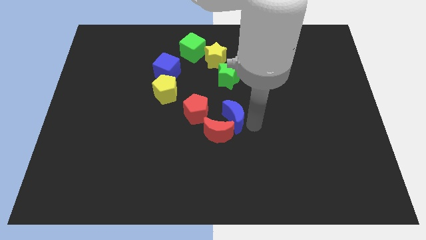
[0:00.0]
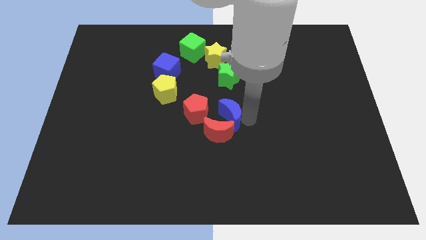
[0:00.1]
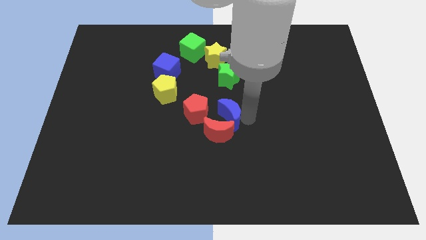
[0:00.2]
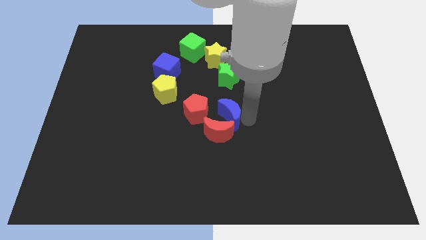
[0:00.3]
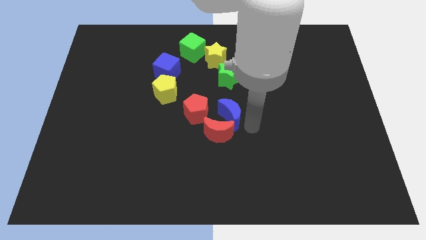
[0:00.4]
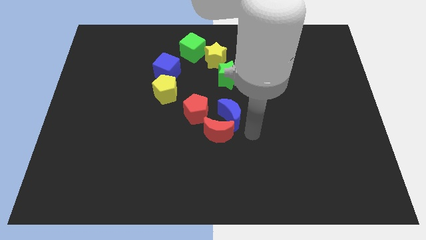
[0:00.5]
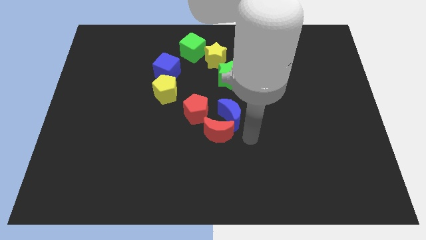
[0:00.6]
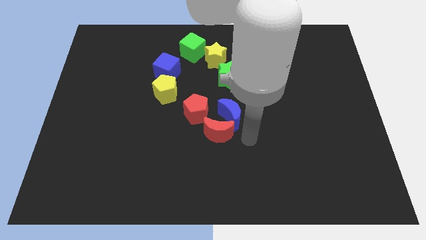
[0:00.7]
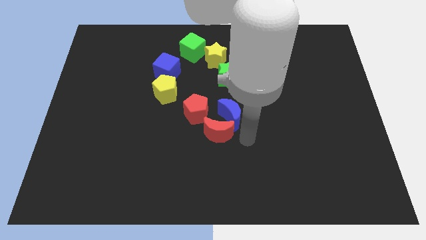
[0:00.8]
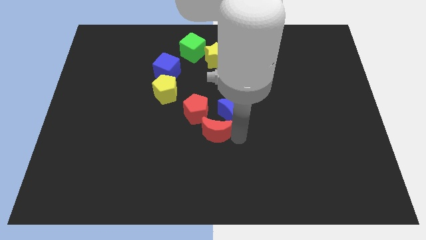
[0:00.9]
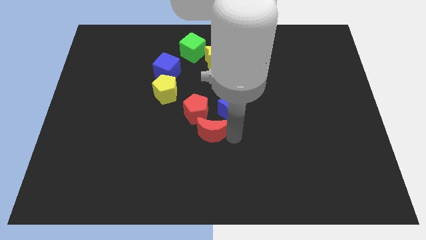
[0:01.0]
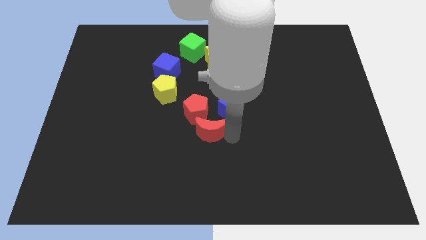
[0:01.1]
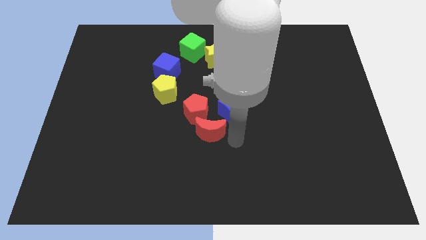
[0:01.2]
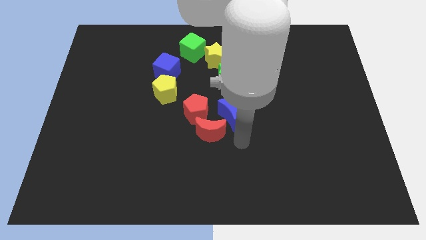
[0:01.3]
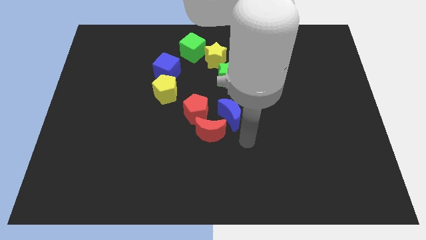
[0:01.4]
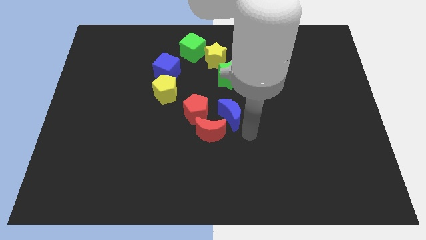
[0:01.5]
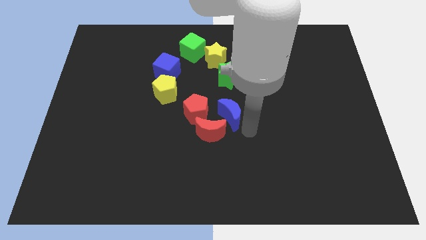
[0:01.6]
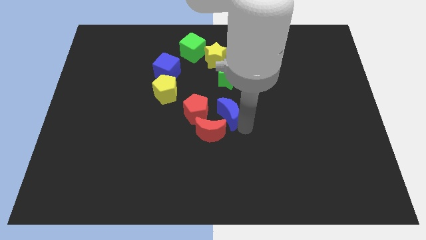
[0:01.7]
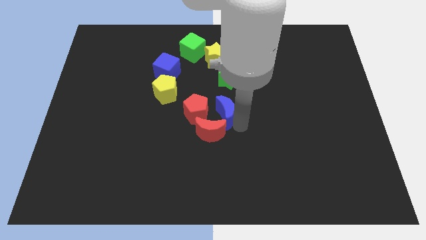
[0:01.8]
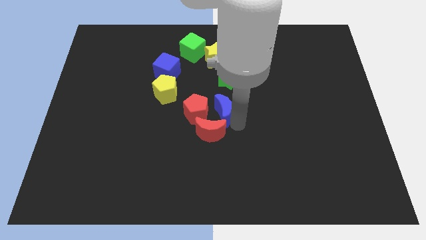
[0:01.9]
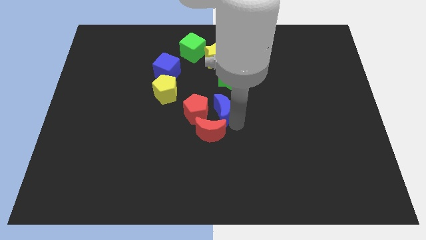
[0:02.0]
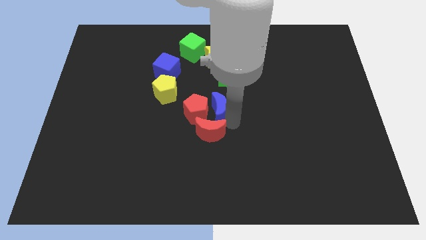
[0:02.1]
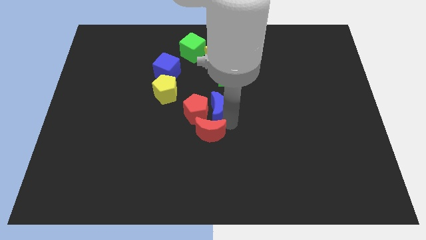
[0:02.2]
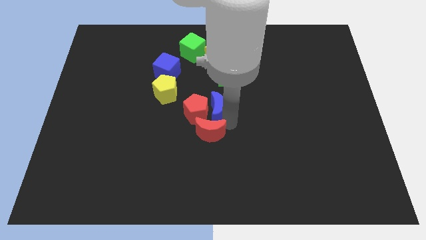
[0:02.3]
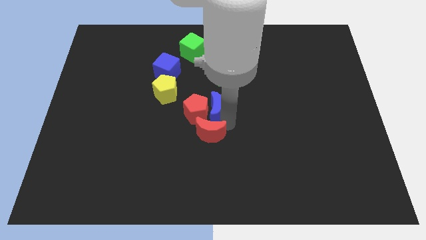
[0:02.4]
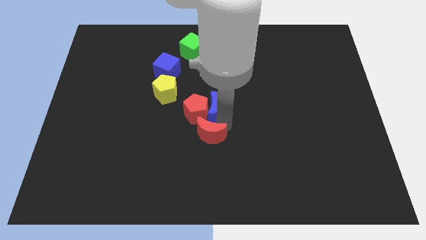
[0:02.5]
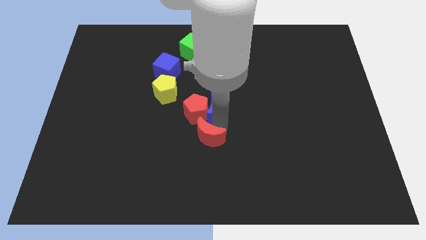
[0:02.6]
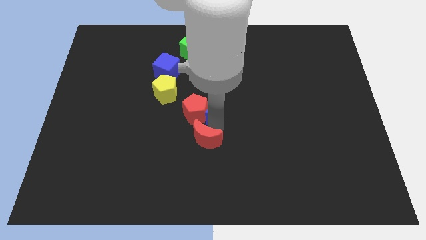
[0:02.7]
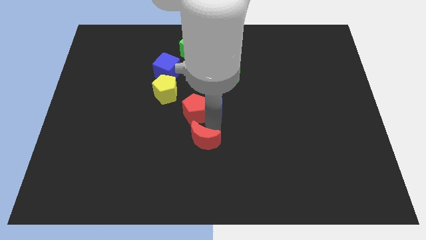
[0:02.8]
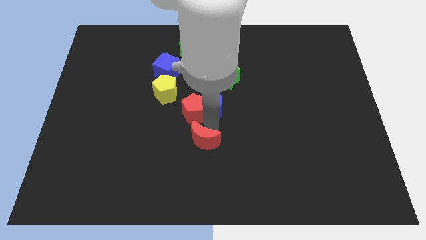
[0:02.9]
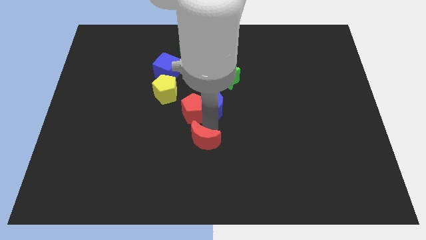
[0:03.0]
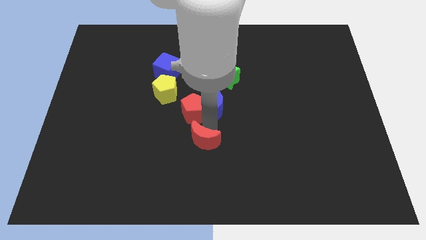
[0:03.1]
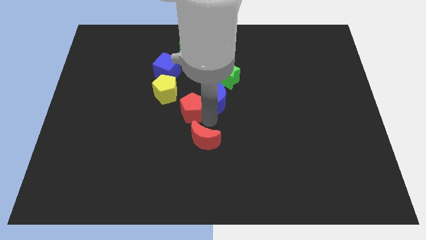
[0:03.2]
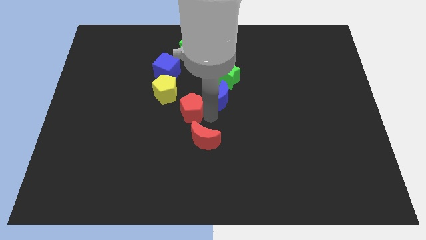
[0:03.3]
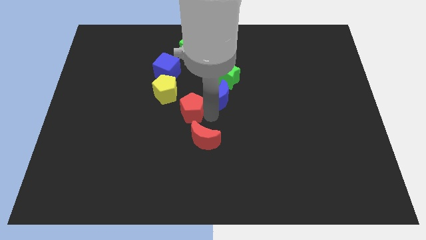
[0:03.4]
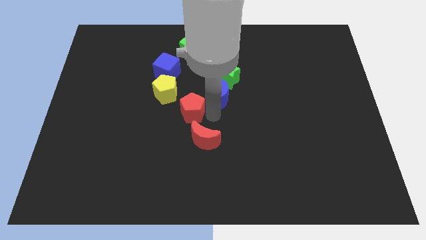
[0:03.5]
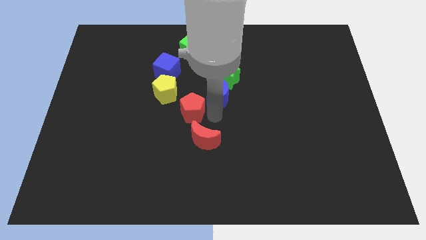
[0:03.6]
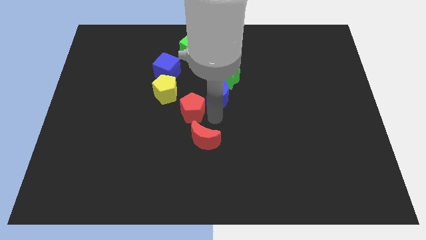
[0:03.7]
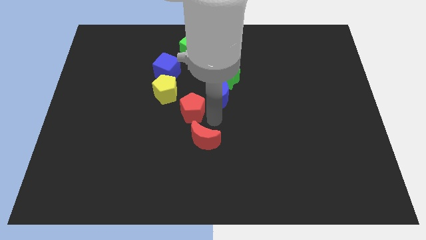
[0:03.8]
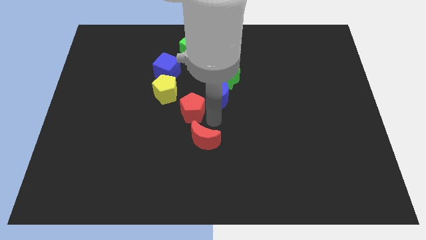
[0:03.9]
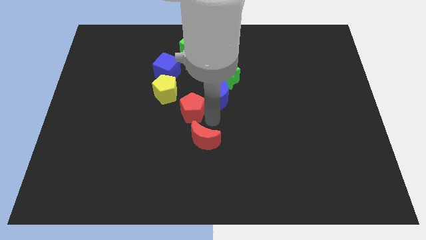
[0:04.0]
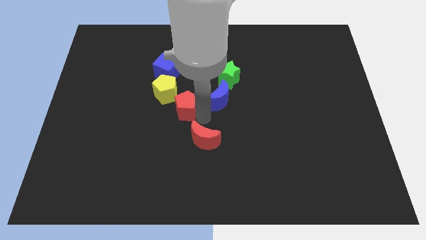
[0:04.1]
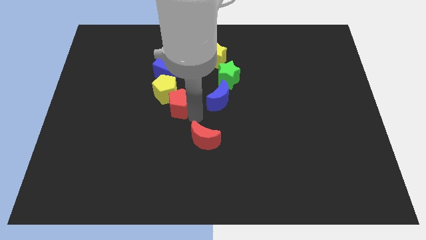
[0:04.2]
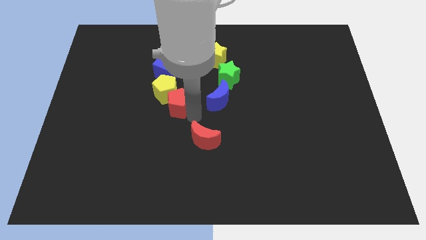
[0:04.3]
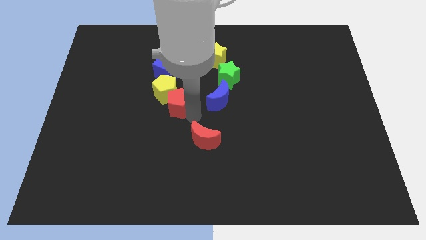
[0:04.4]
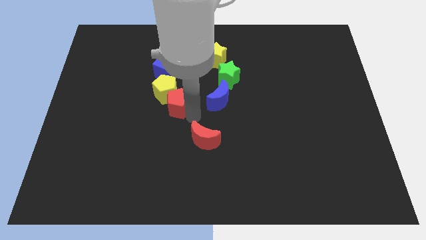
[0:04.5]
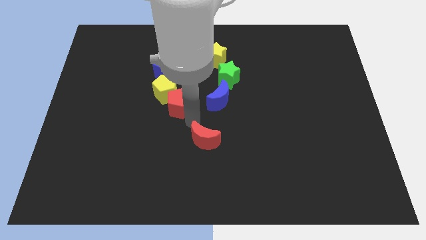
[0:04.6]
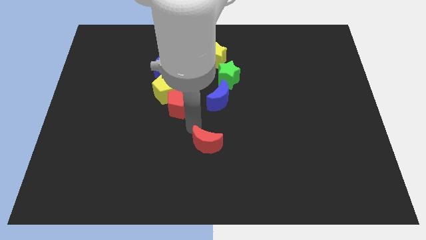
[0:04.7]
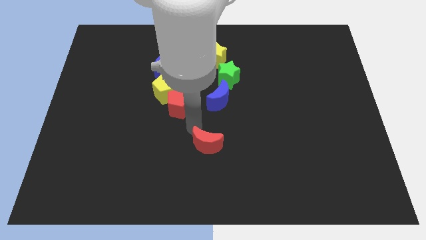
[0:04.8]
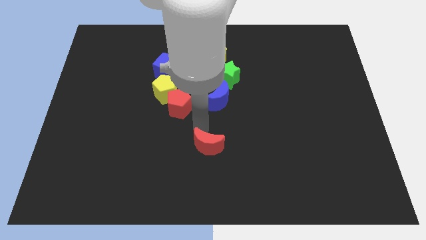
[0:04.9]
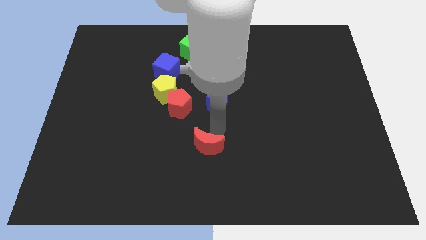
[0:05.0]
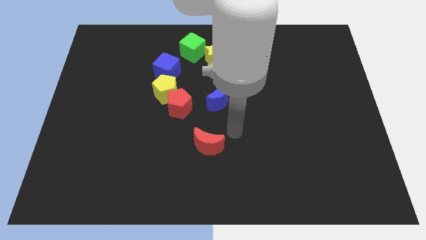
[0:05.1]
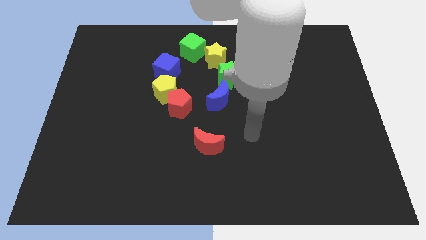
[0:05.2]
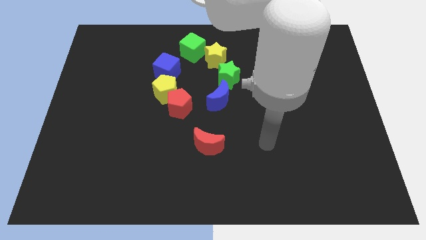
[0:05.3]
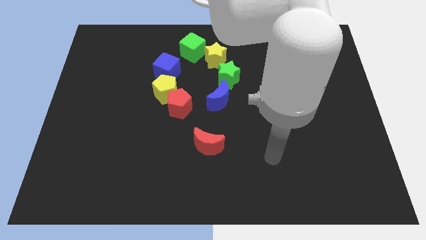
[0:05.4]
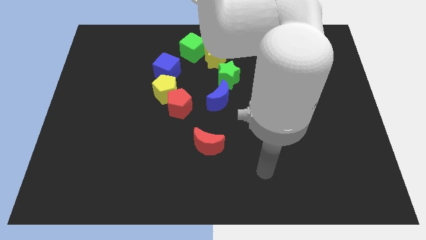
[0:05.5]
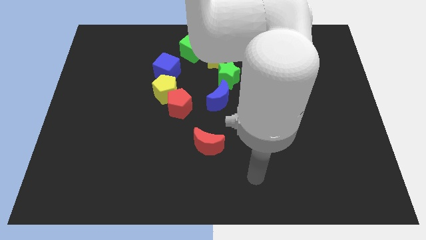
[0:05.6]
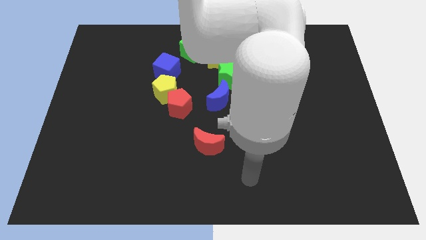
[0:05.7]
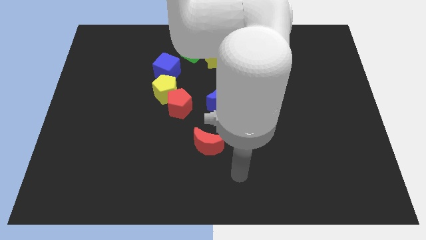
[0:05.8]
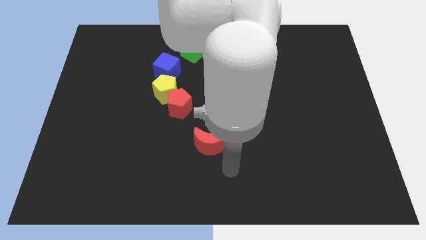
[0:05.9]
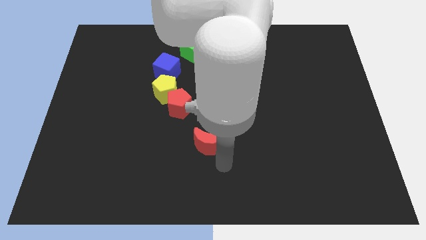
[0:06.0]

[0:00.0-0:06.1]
separate the red pentagon and crescents

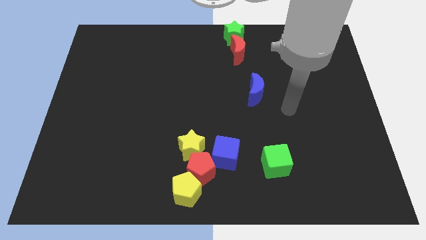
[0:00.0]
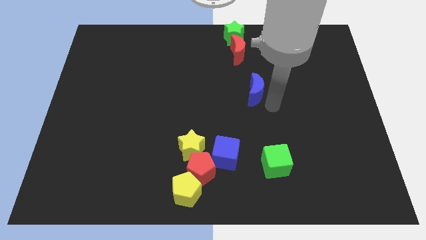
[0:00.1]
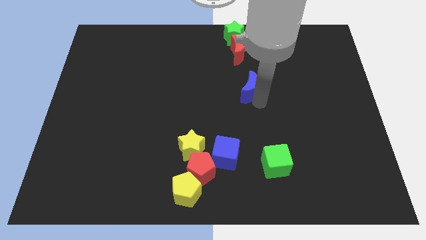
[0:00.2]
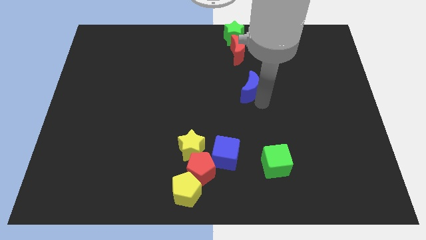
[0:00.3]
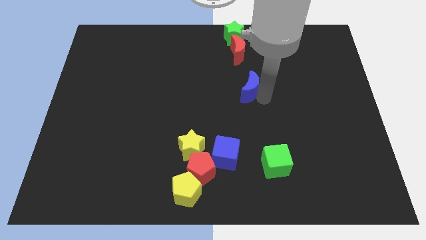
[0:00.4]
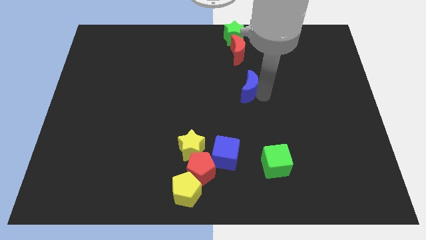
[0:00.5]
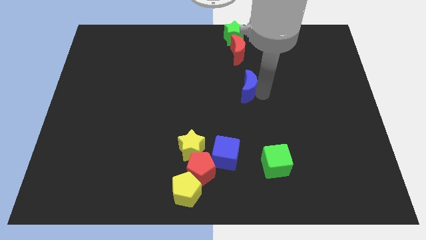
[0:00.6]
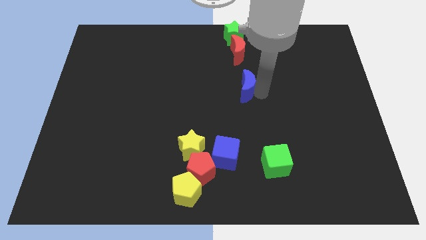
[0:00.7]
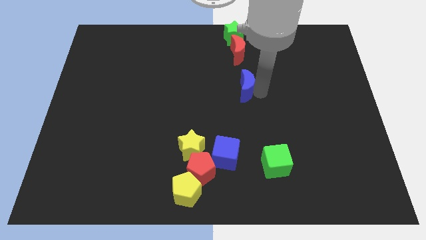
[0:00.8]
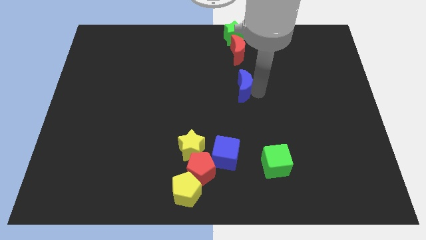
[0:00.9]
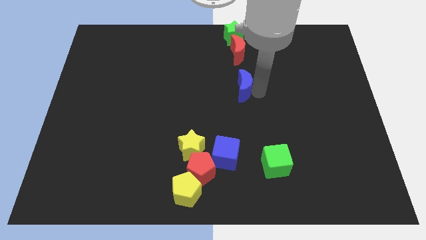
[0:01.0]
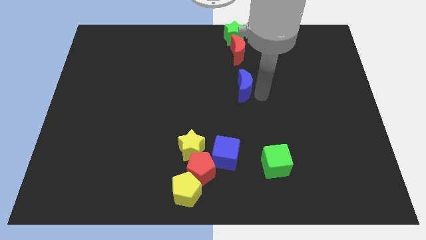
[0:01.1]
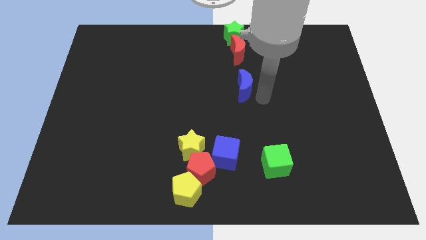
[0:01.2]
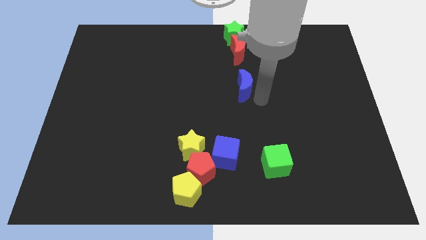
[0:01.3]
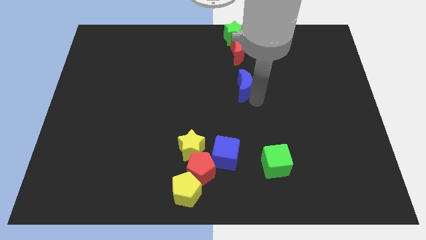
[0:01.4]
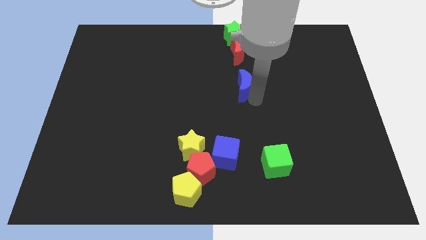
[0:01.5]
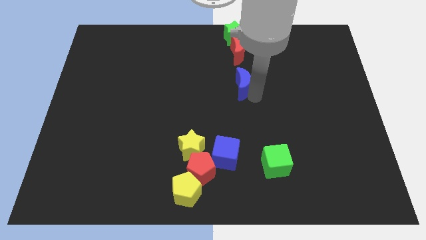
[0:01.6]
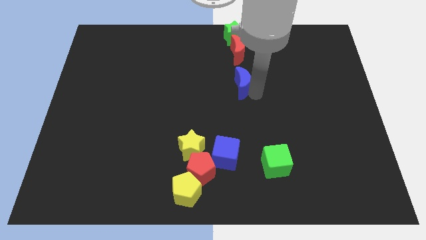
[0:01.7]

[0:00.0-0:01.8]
place the blue moon vertically below the red moon

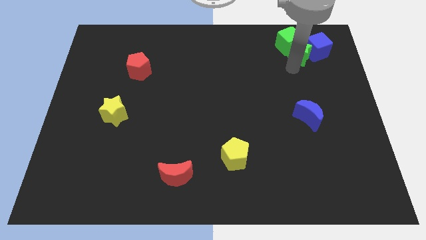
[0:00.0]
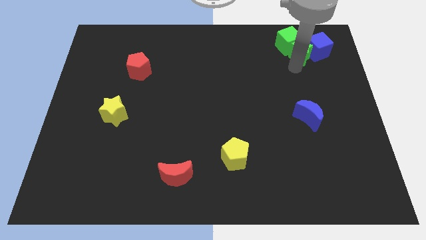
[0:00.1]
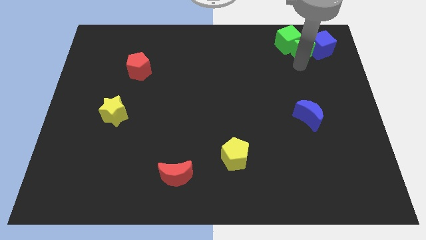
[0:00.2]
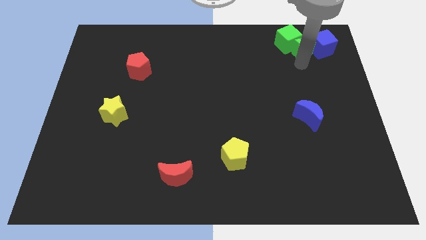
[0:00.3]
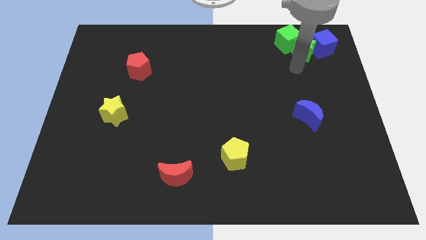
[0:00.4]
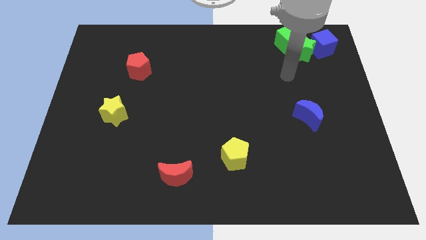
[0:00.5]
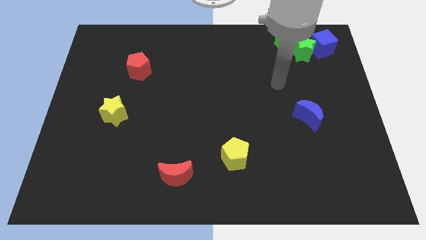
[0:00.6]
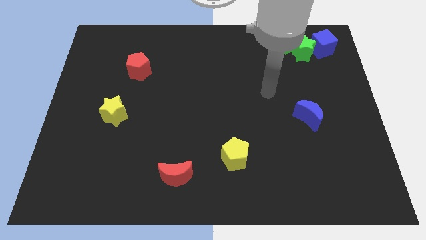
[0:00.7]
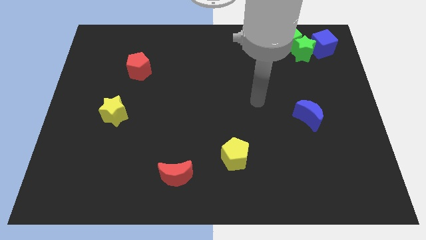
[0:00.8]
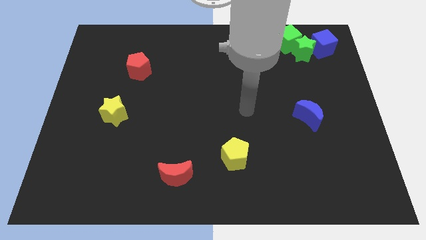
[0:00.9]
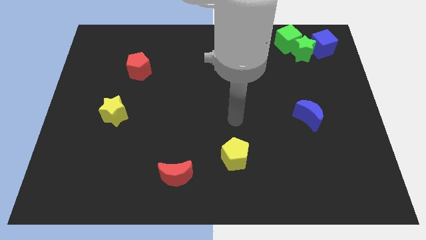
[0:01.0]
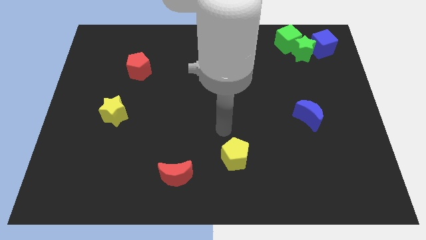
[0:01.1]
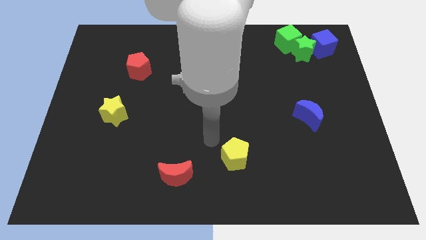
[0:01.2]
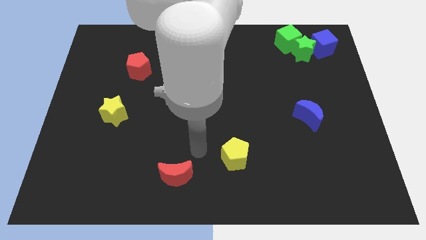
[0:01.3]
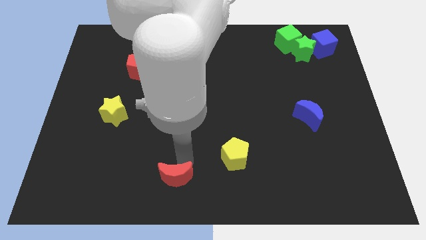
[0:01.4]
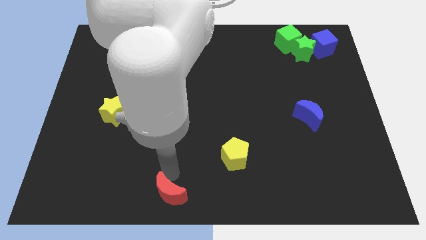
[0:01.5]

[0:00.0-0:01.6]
move the green cube and star and blue cube to the top right
